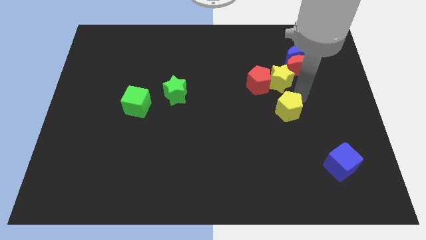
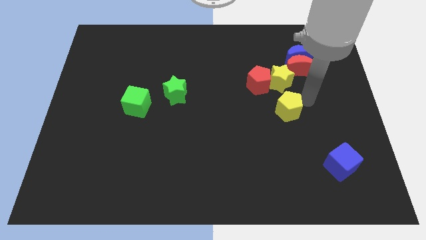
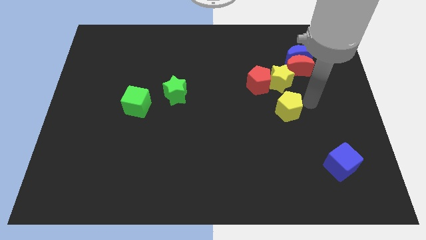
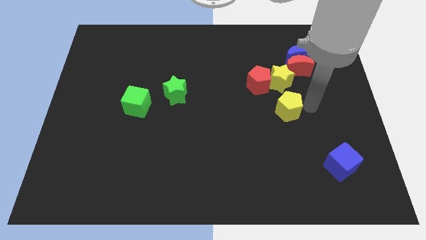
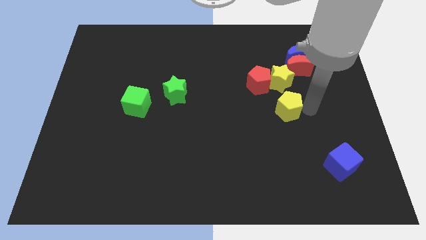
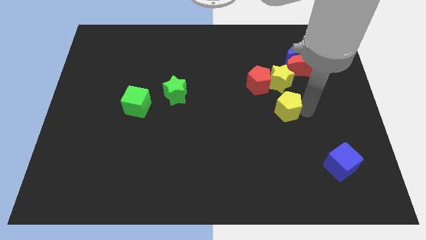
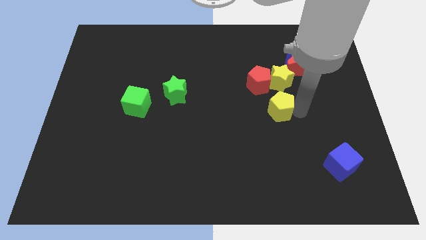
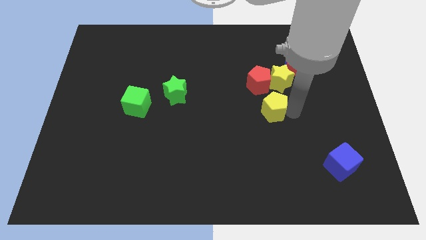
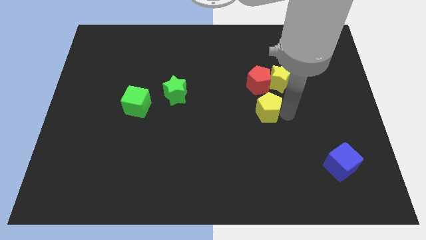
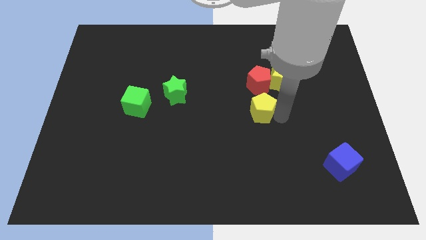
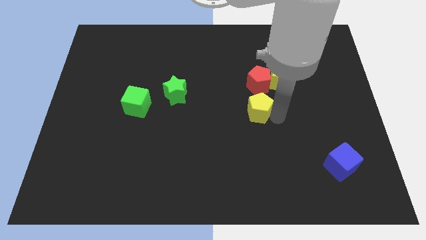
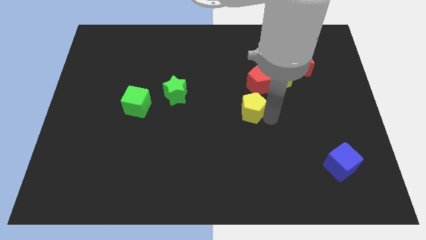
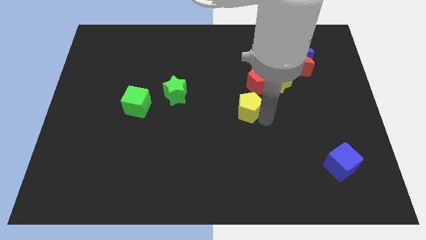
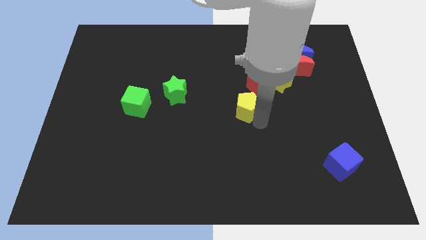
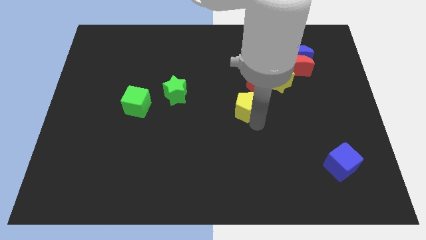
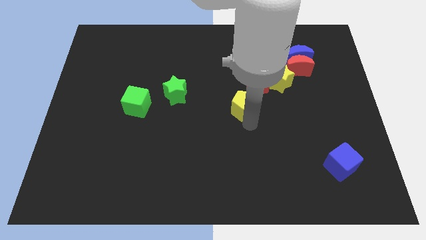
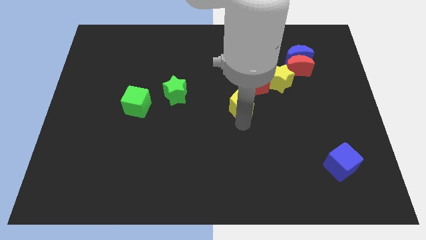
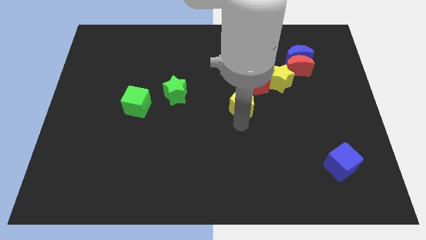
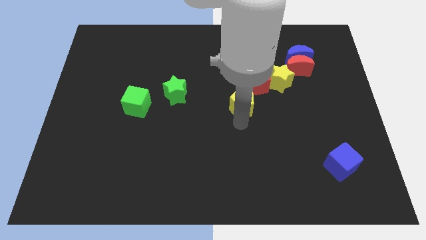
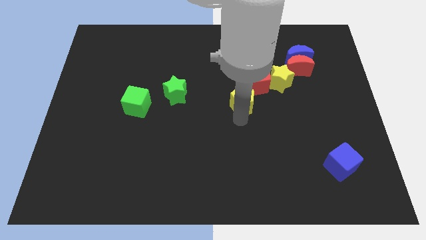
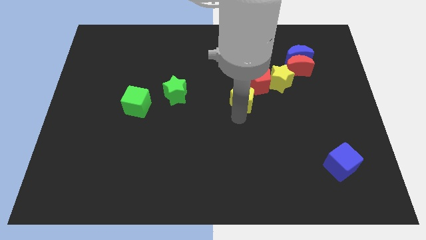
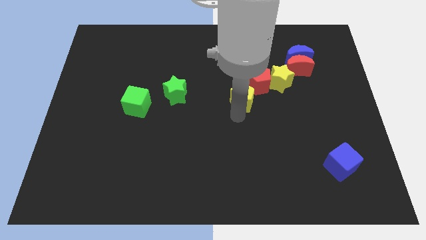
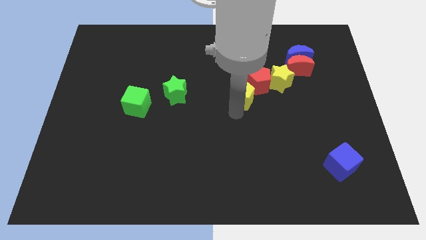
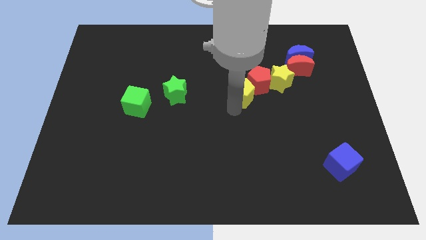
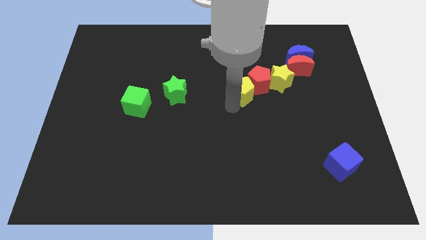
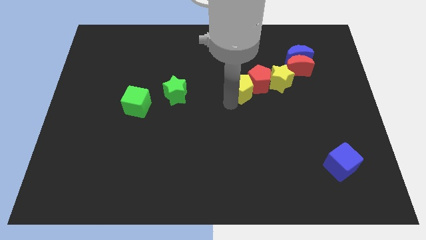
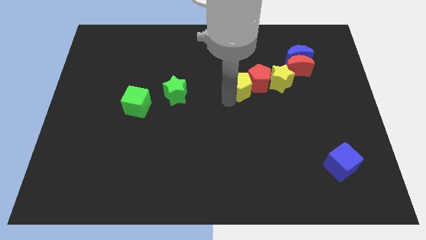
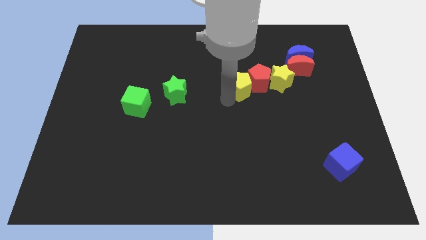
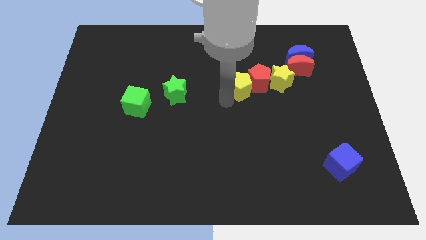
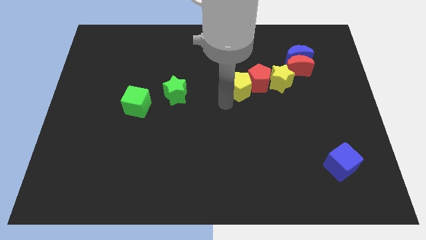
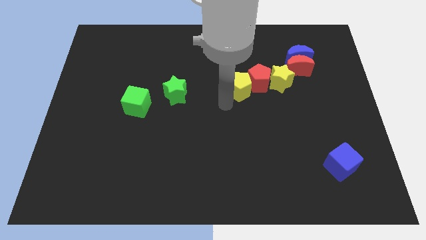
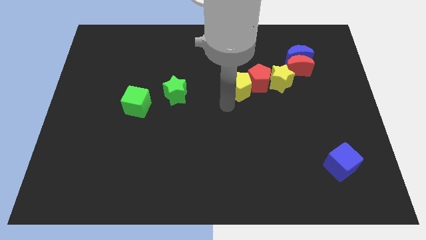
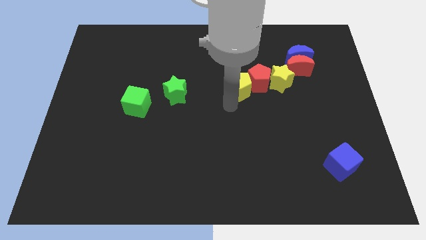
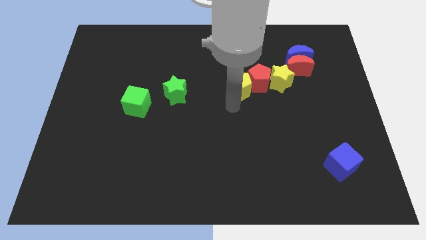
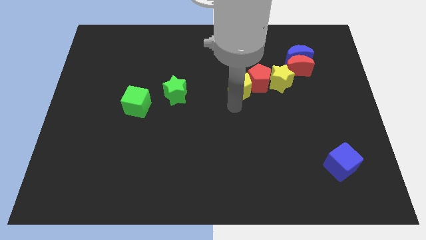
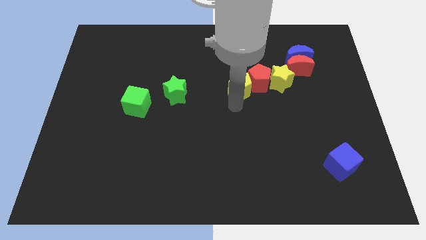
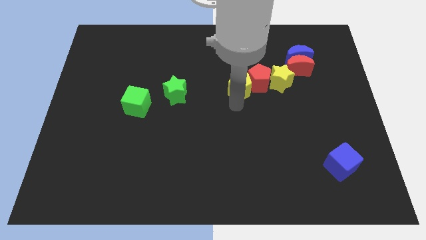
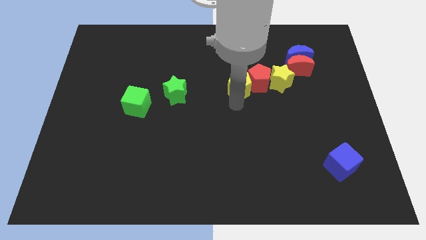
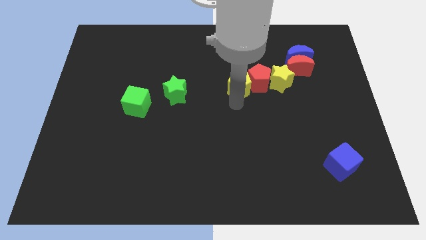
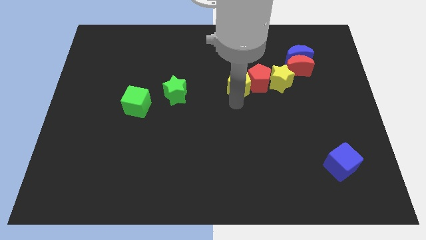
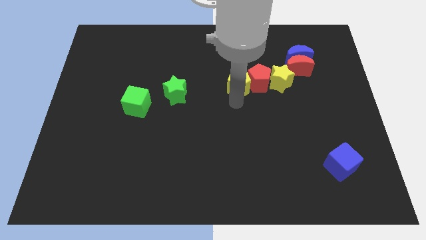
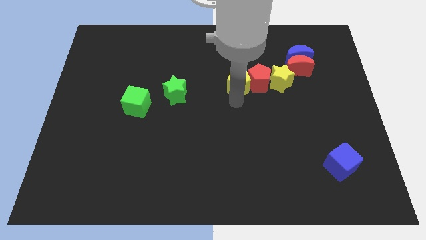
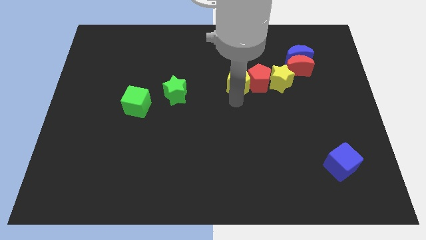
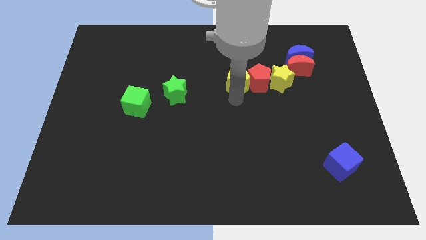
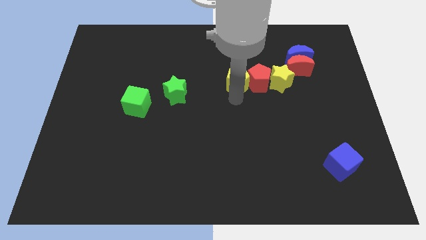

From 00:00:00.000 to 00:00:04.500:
place yellow pentagon to the right of green star

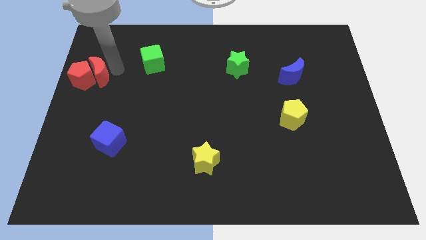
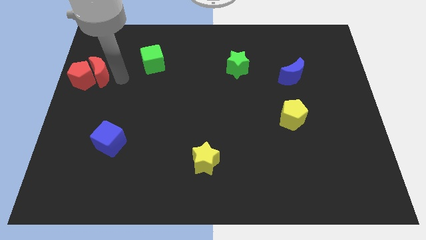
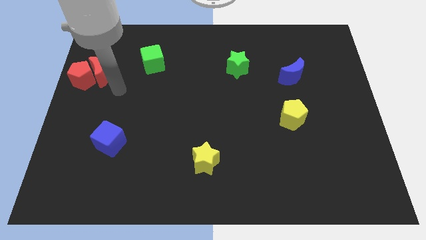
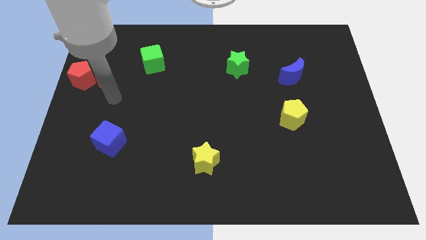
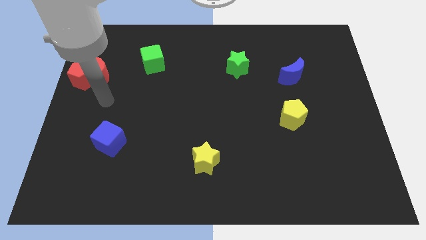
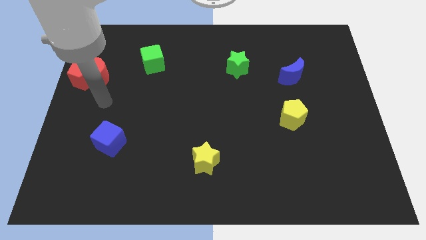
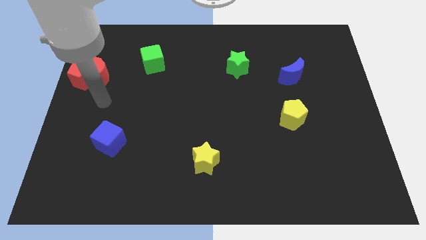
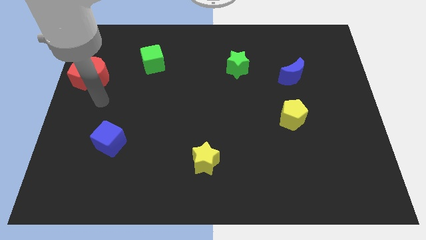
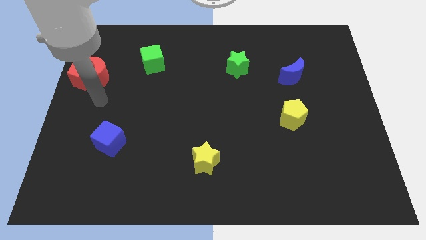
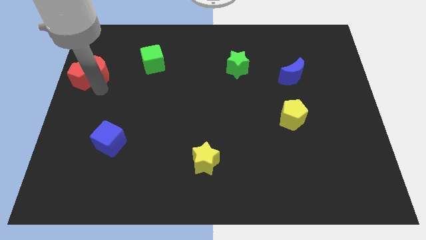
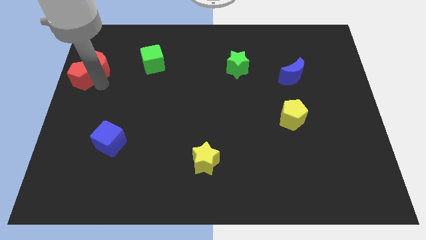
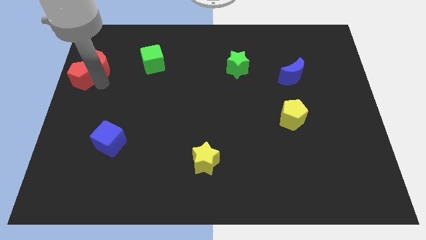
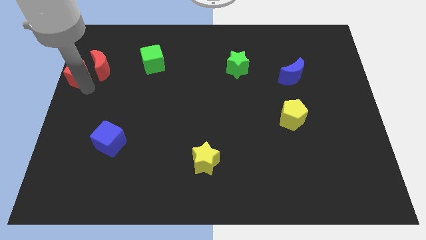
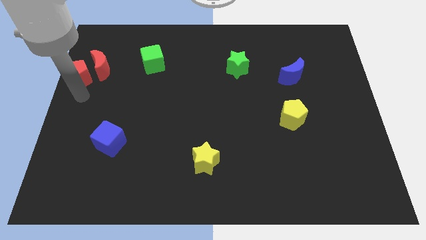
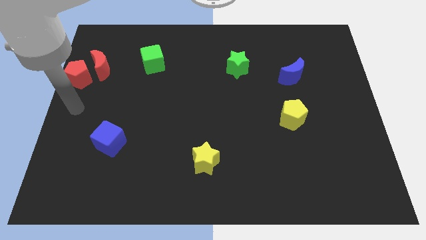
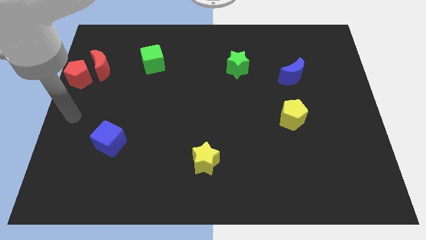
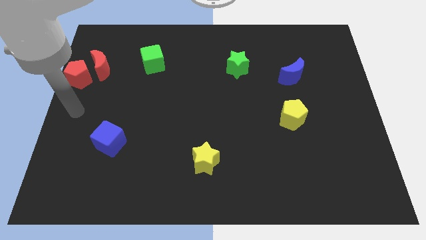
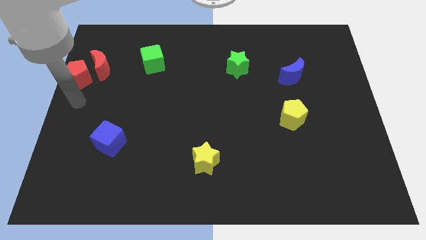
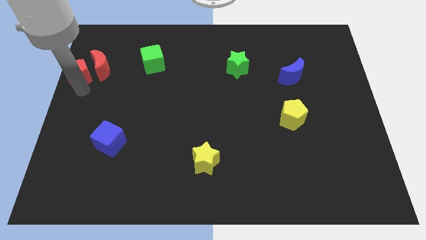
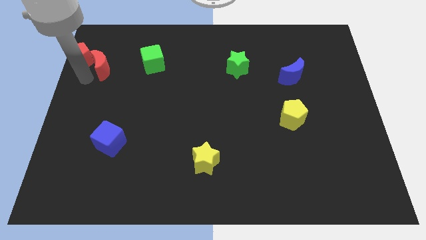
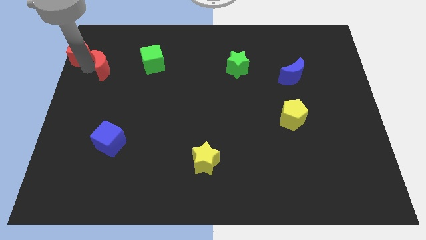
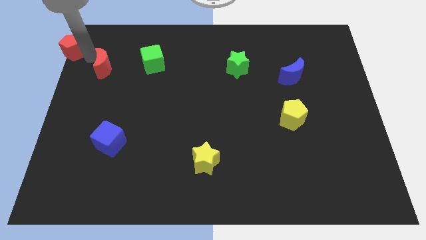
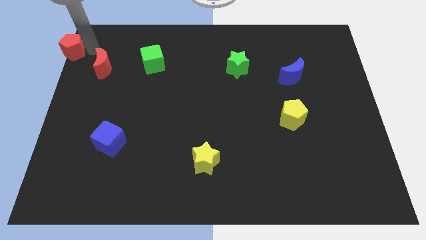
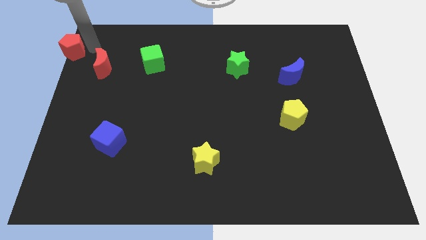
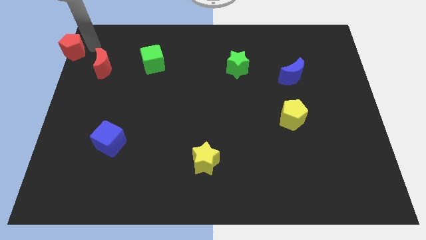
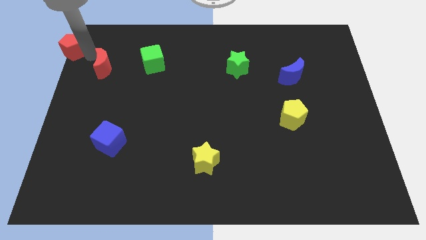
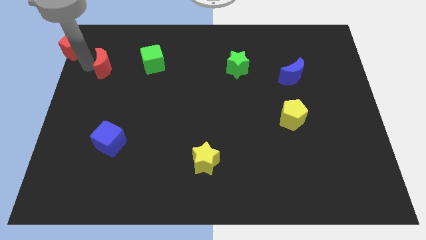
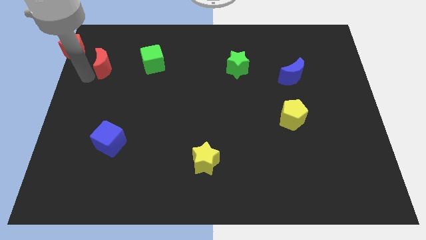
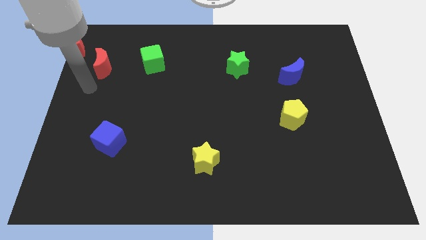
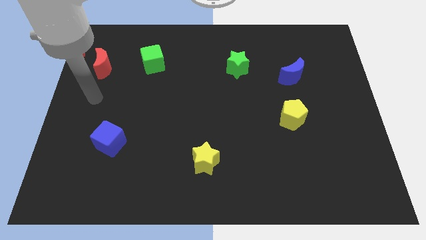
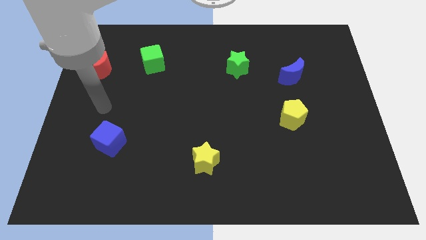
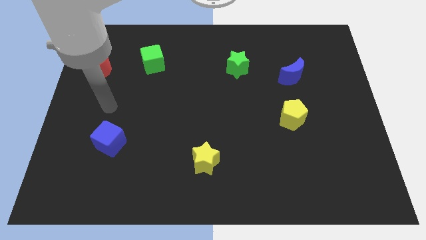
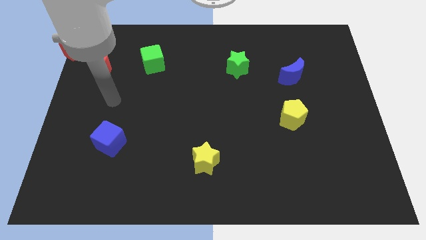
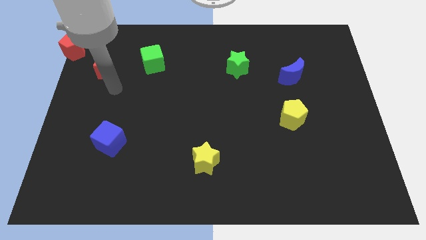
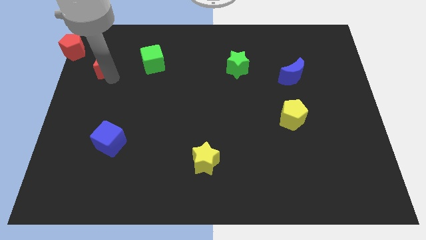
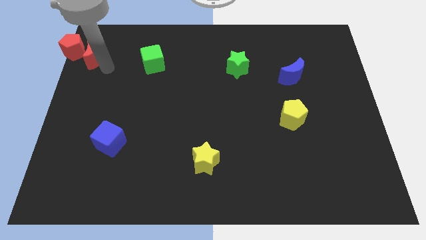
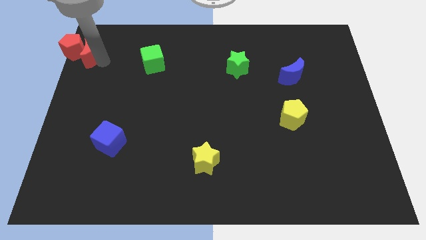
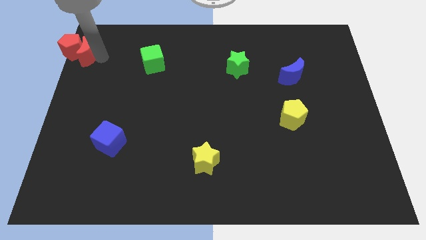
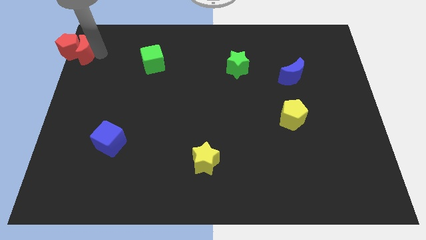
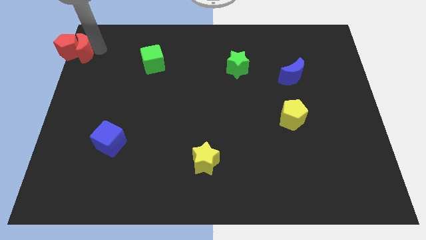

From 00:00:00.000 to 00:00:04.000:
move the red pentagon and red moon towards the top left

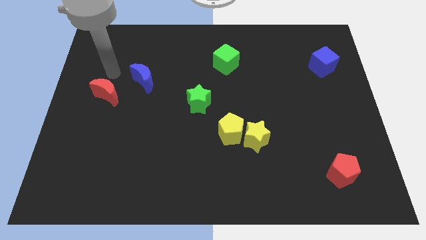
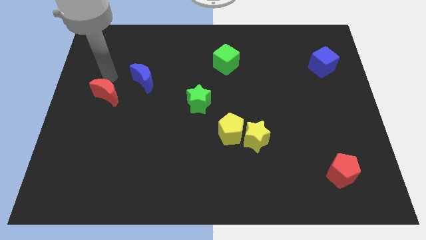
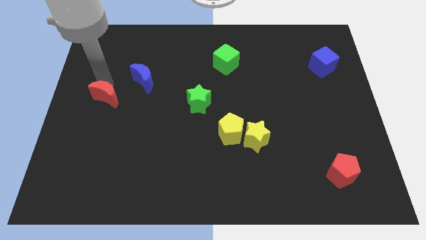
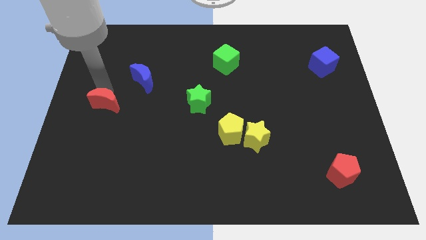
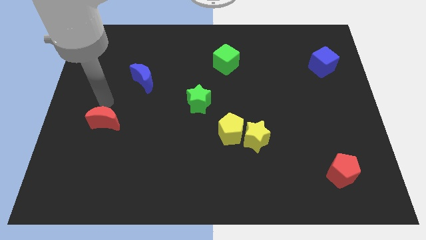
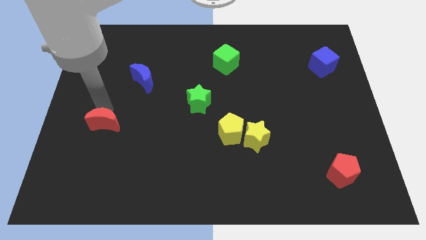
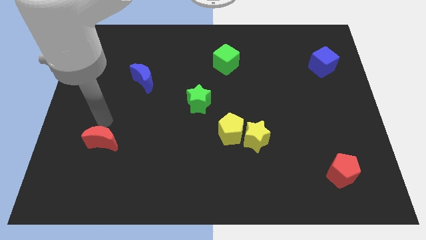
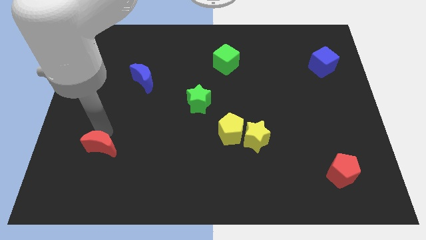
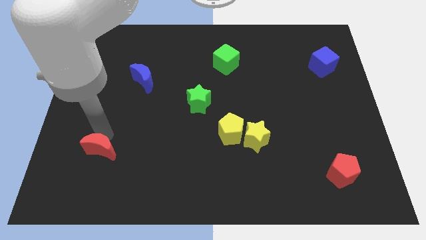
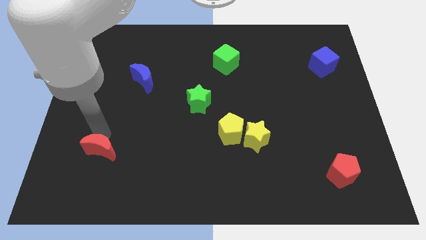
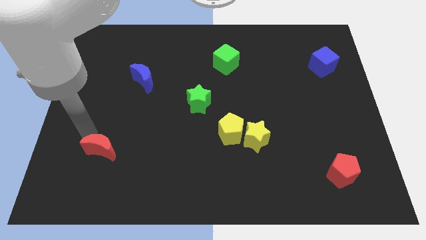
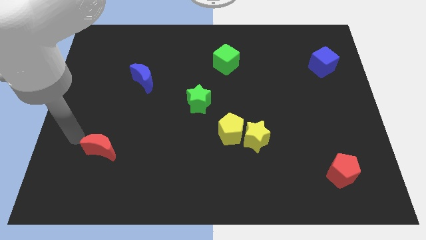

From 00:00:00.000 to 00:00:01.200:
push the red crescent towards the bottom left of the board
